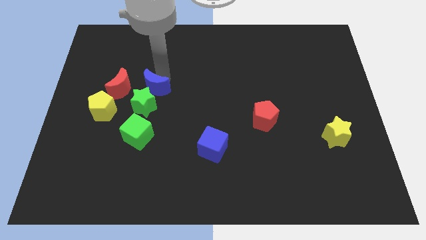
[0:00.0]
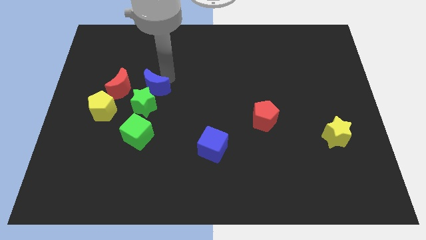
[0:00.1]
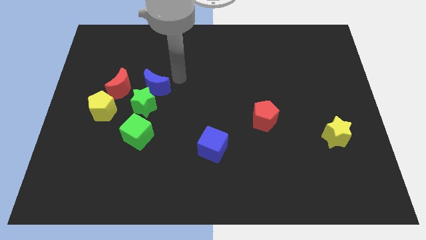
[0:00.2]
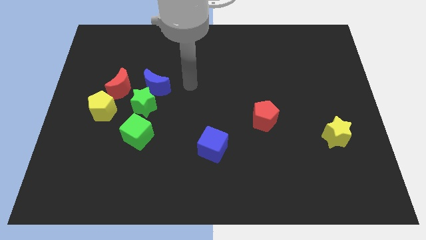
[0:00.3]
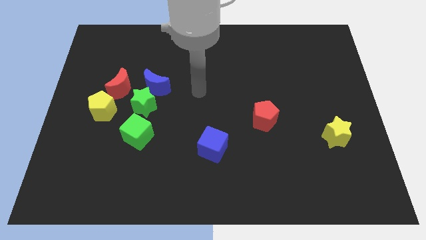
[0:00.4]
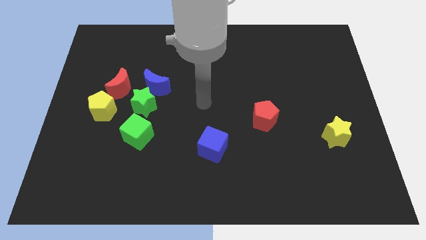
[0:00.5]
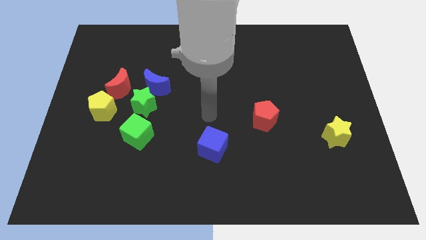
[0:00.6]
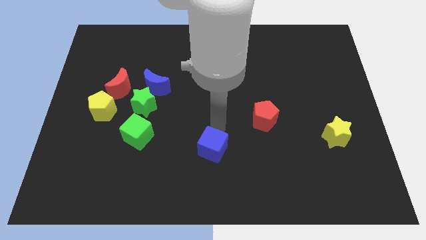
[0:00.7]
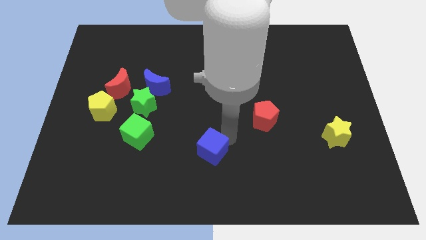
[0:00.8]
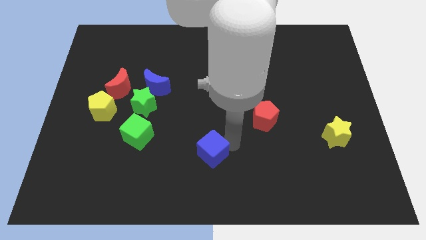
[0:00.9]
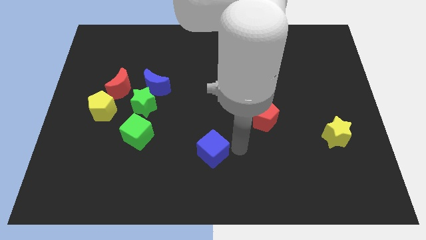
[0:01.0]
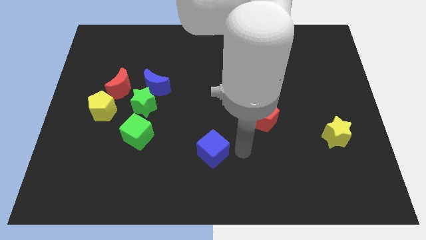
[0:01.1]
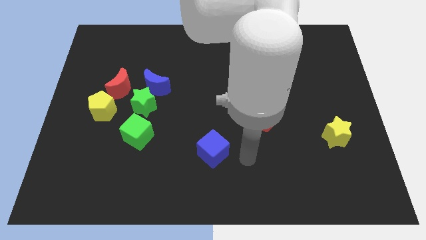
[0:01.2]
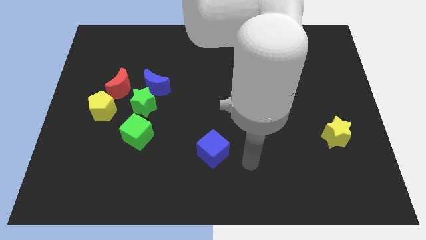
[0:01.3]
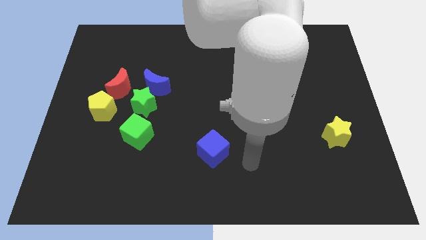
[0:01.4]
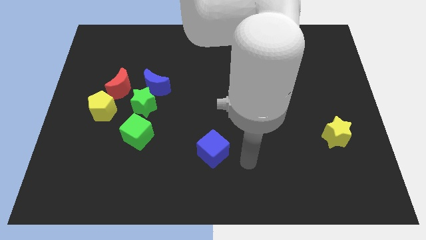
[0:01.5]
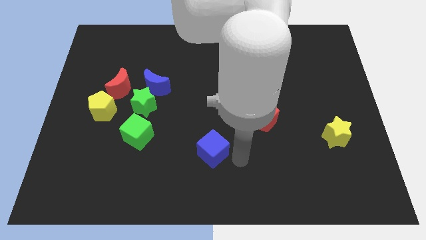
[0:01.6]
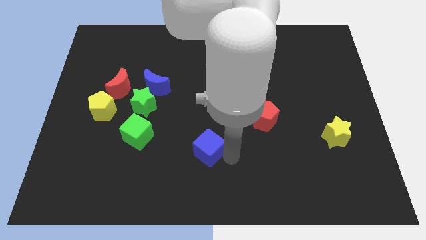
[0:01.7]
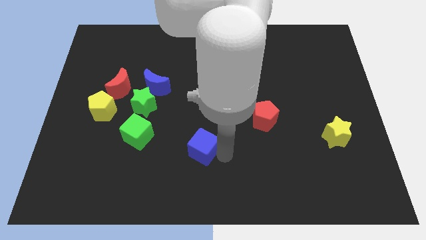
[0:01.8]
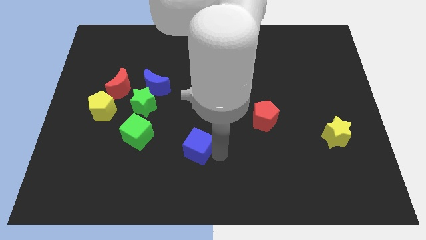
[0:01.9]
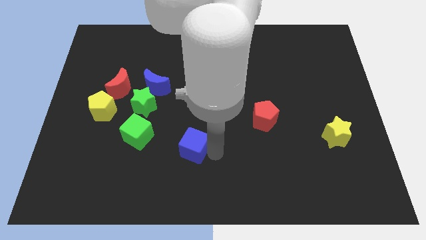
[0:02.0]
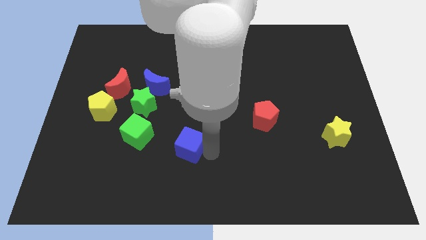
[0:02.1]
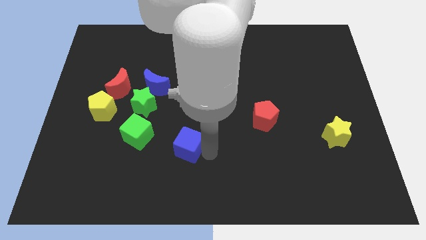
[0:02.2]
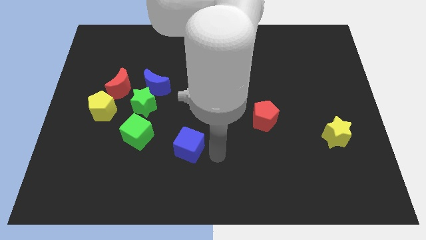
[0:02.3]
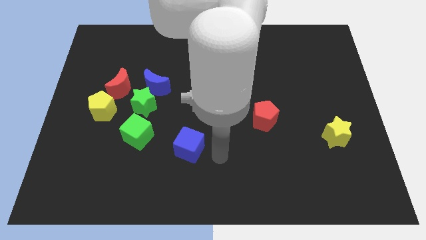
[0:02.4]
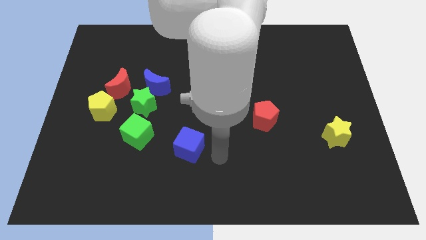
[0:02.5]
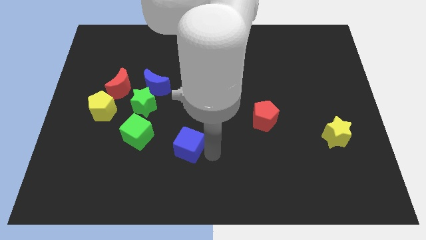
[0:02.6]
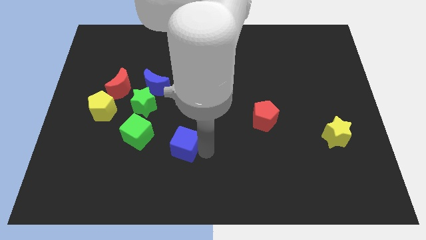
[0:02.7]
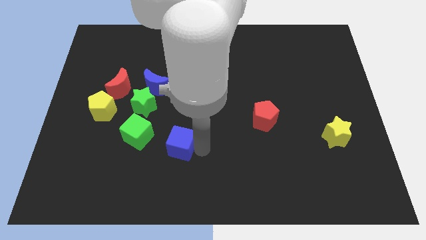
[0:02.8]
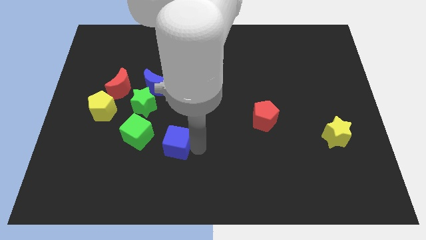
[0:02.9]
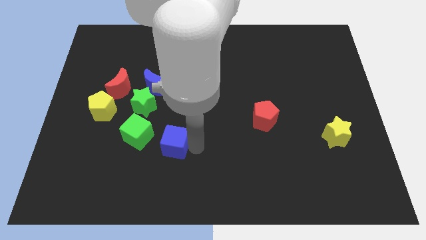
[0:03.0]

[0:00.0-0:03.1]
slide blue cube towards green cube

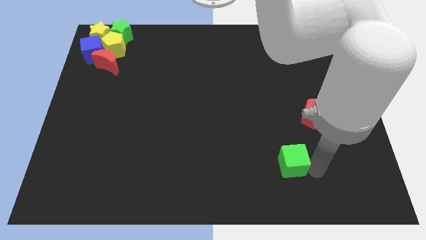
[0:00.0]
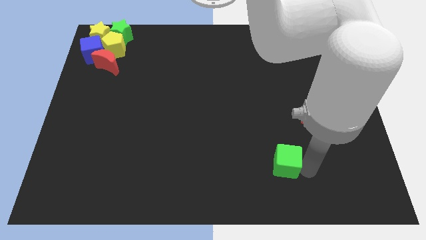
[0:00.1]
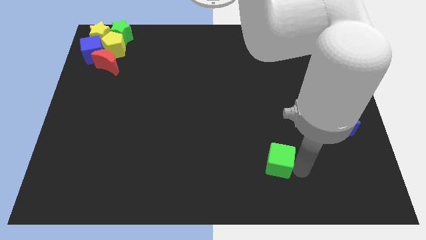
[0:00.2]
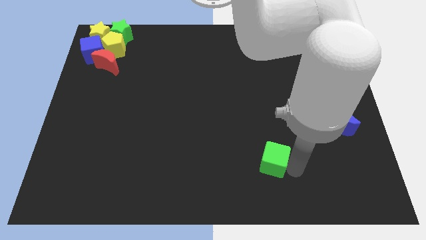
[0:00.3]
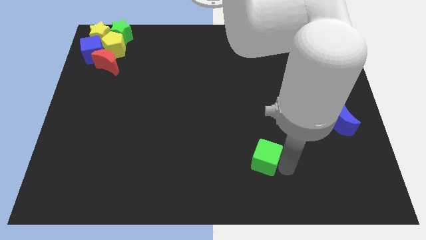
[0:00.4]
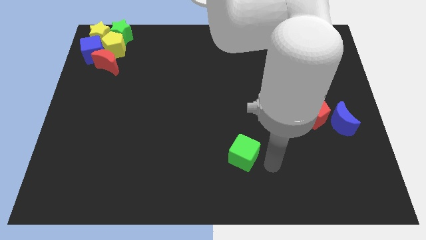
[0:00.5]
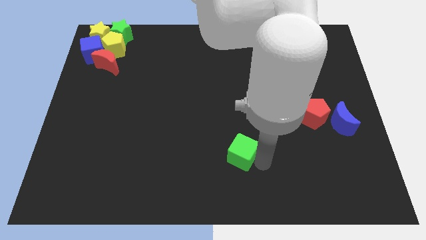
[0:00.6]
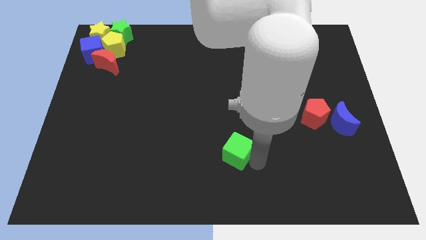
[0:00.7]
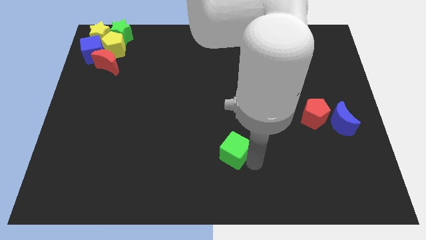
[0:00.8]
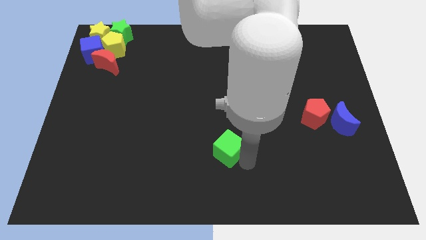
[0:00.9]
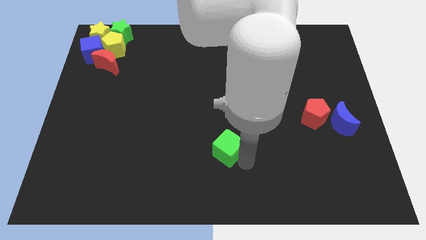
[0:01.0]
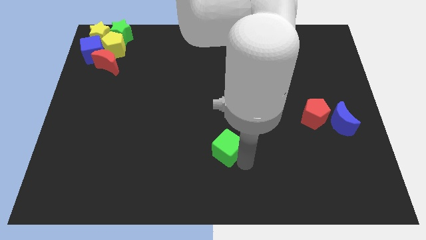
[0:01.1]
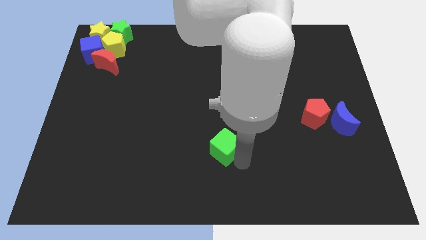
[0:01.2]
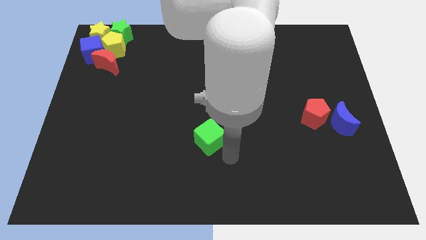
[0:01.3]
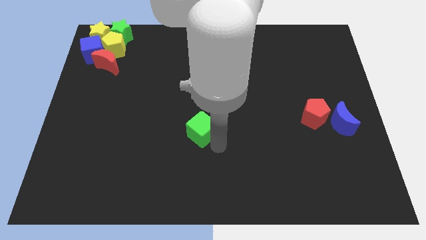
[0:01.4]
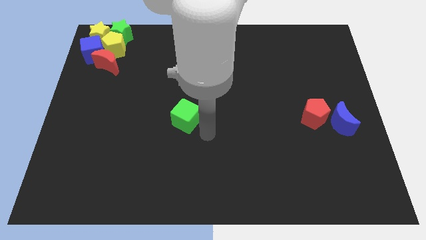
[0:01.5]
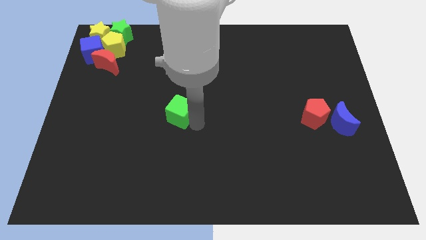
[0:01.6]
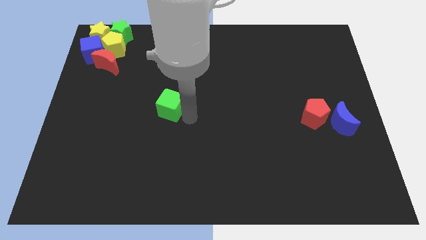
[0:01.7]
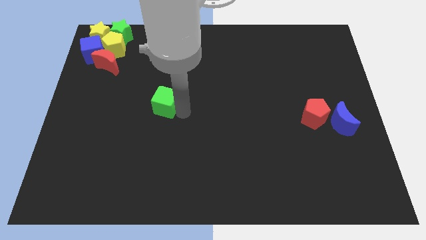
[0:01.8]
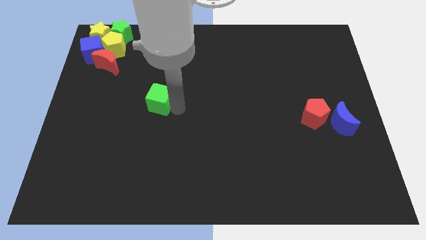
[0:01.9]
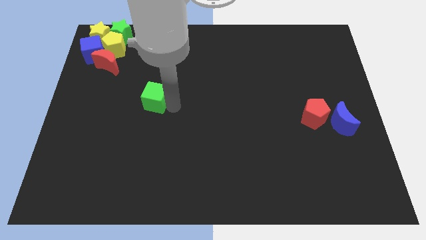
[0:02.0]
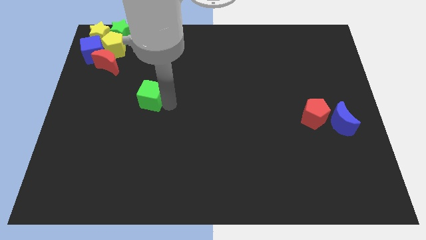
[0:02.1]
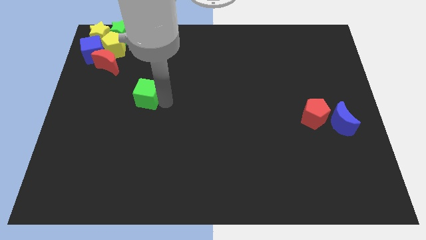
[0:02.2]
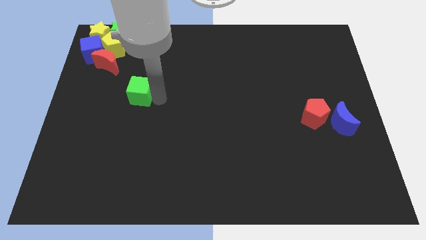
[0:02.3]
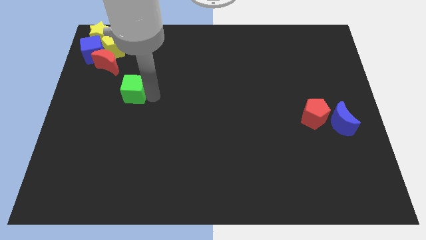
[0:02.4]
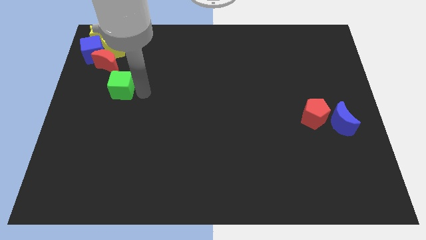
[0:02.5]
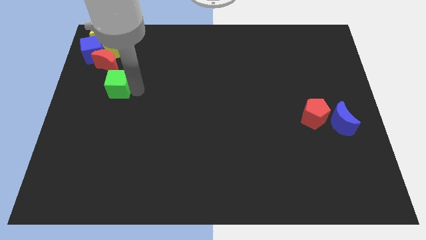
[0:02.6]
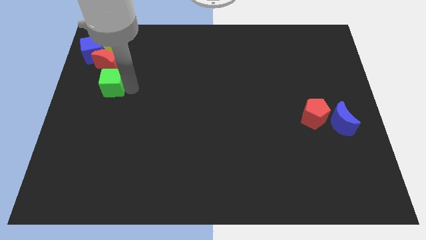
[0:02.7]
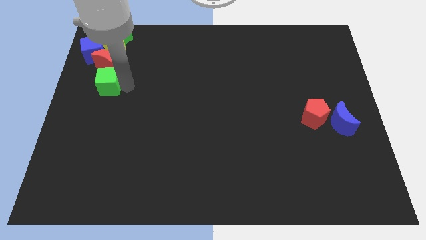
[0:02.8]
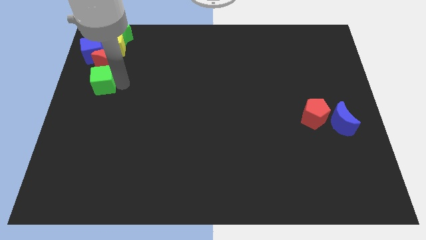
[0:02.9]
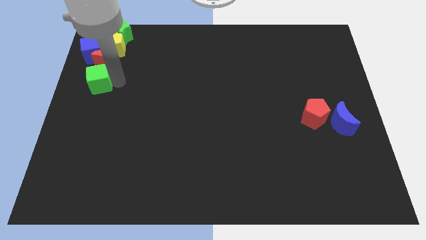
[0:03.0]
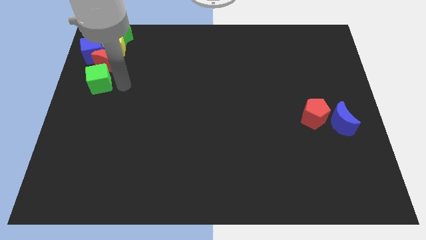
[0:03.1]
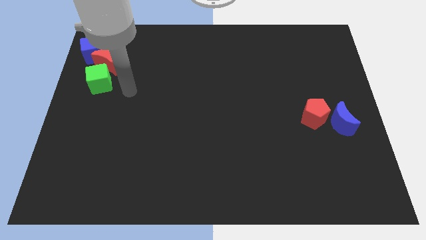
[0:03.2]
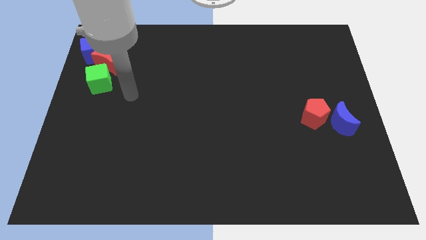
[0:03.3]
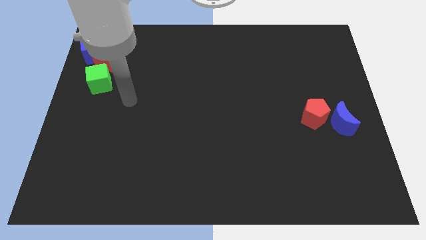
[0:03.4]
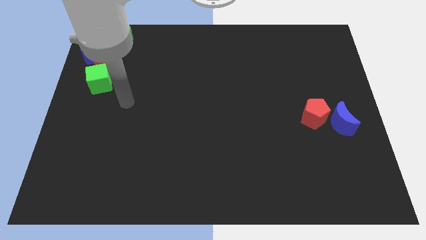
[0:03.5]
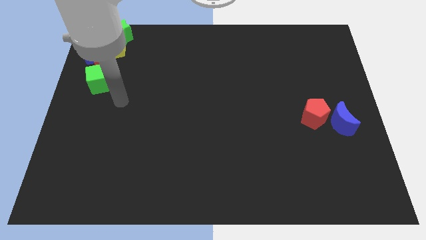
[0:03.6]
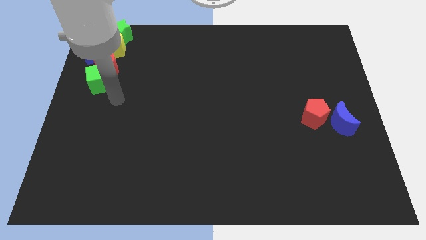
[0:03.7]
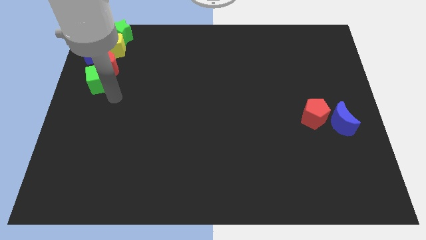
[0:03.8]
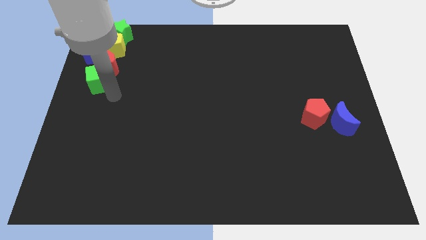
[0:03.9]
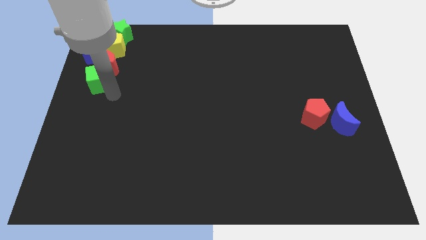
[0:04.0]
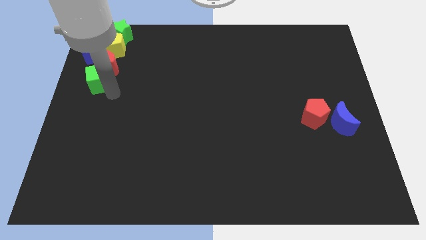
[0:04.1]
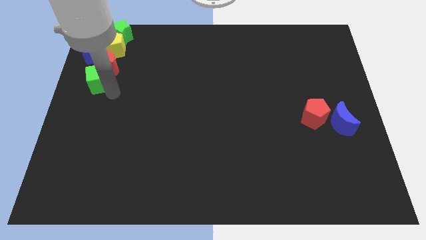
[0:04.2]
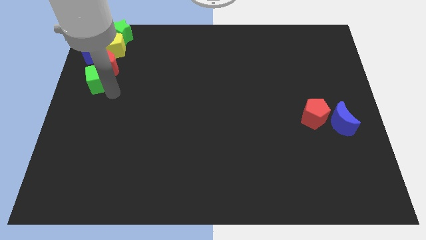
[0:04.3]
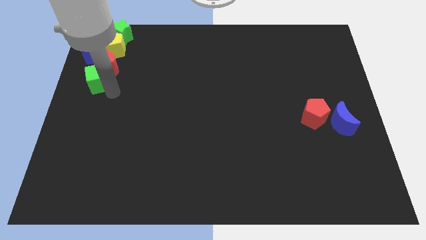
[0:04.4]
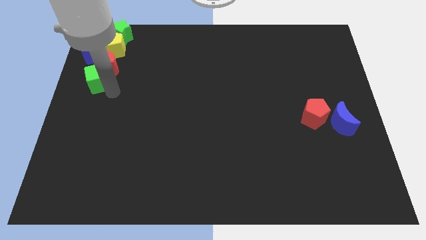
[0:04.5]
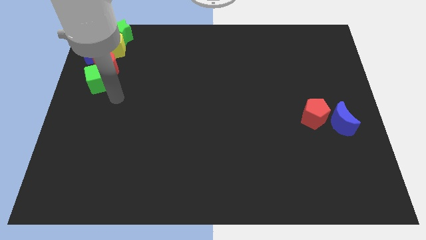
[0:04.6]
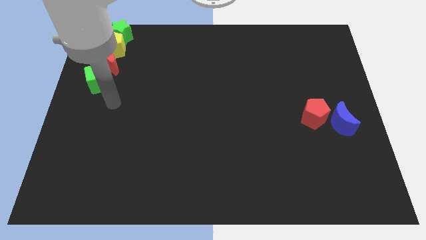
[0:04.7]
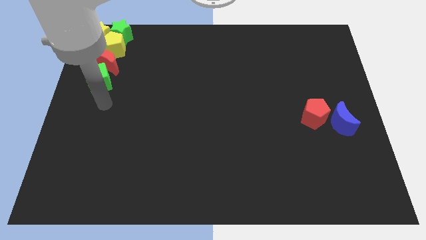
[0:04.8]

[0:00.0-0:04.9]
move the green cube below the red moon

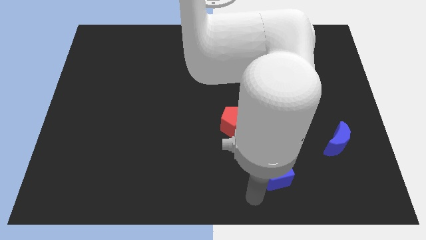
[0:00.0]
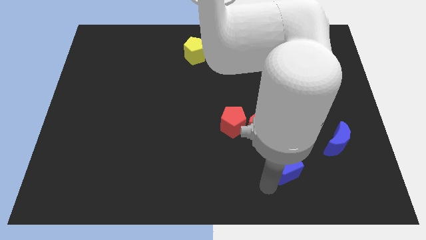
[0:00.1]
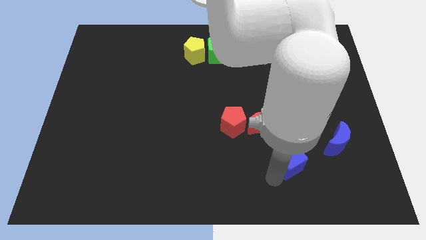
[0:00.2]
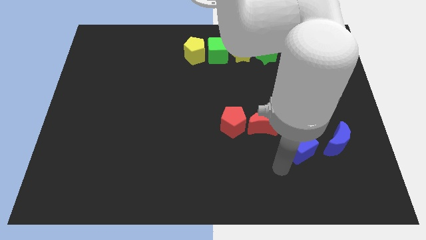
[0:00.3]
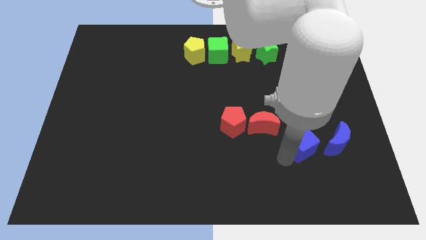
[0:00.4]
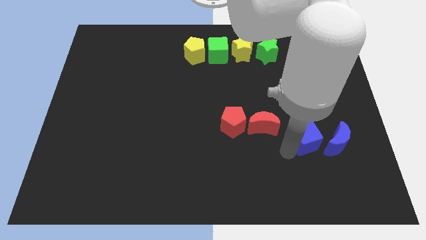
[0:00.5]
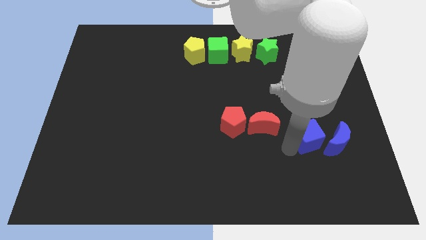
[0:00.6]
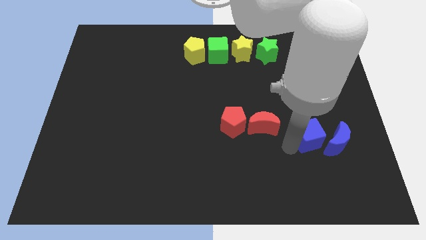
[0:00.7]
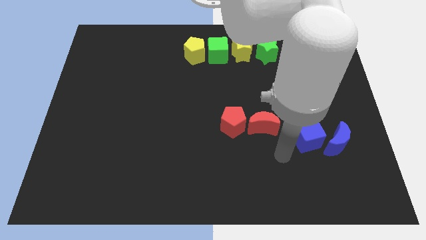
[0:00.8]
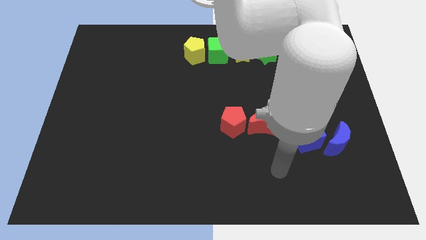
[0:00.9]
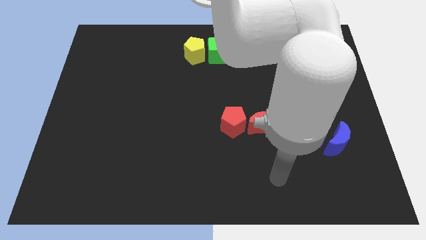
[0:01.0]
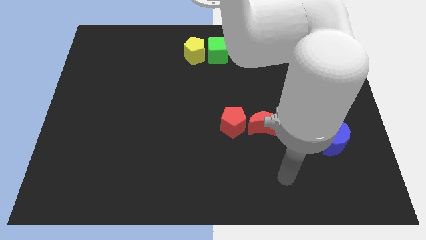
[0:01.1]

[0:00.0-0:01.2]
place the blue cube beside the blue moon
